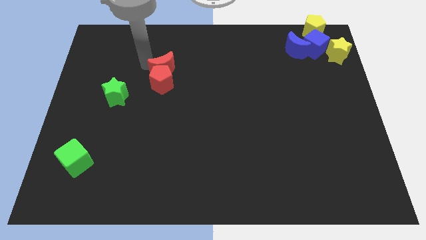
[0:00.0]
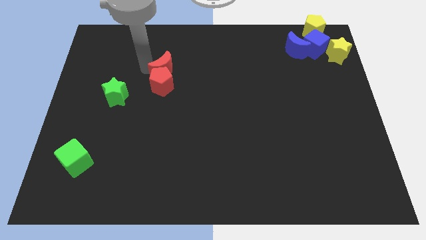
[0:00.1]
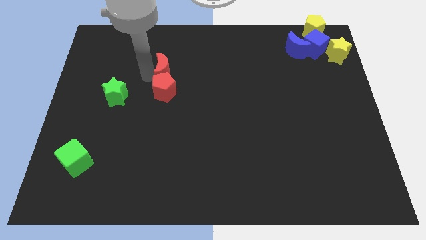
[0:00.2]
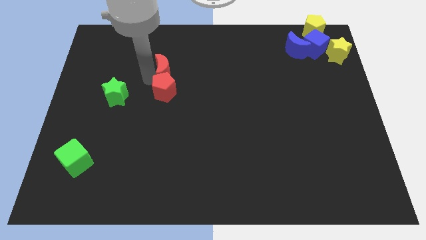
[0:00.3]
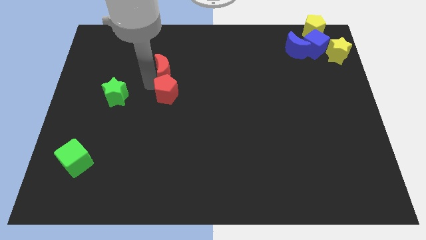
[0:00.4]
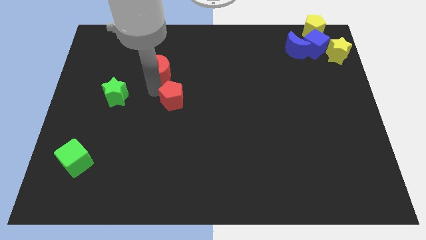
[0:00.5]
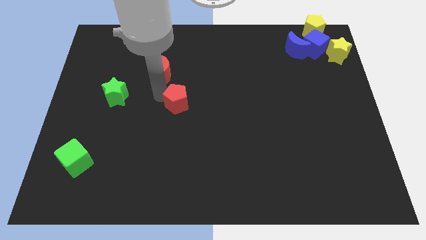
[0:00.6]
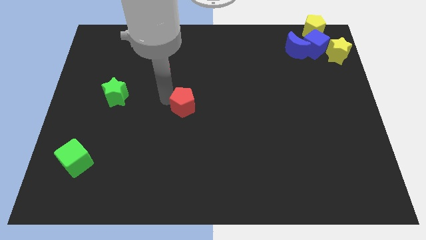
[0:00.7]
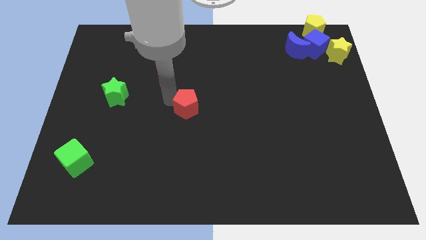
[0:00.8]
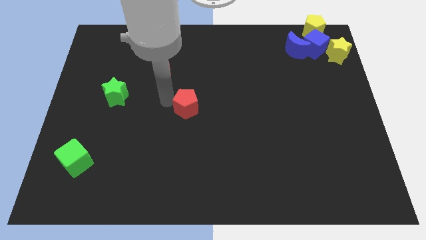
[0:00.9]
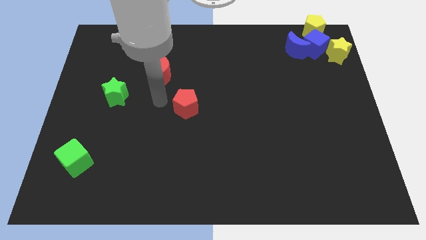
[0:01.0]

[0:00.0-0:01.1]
separate the red pentagon from the red crescent

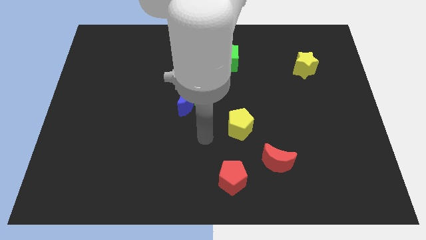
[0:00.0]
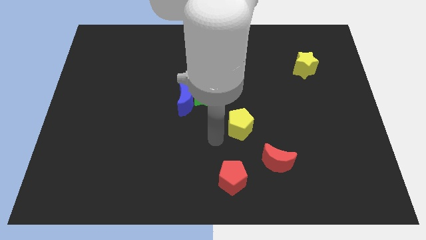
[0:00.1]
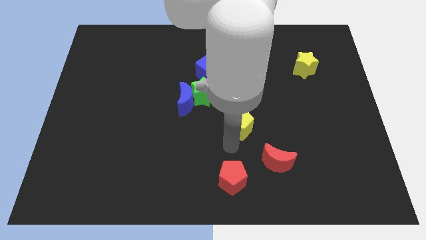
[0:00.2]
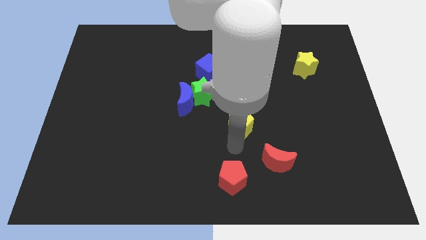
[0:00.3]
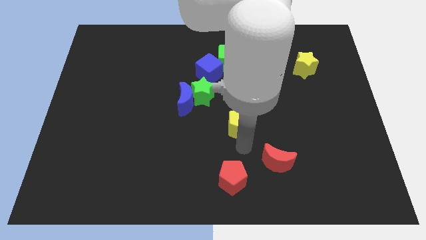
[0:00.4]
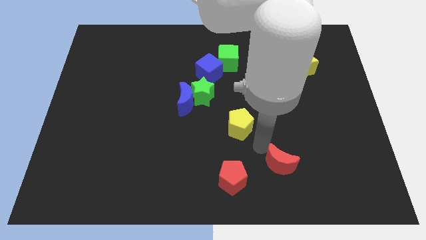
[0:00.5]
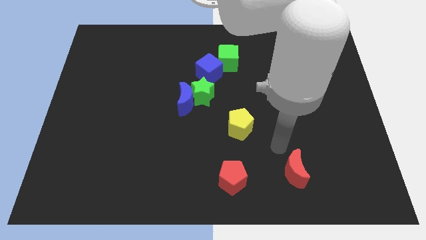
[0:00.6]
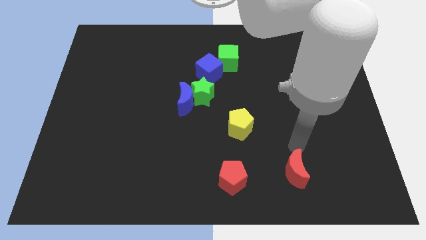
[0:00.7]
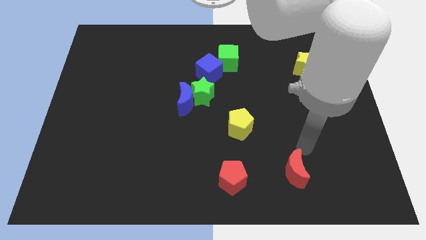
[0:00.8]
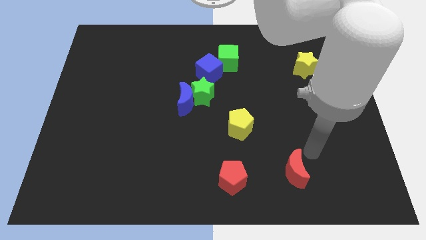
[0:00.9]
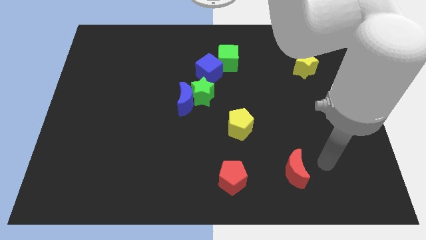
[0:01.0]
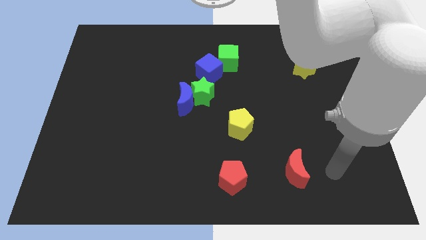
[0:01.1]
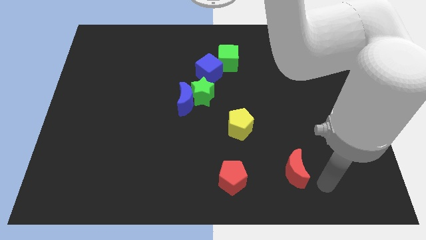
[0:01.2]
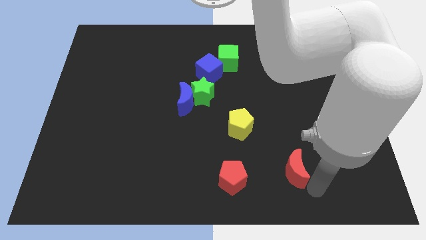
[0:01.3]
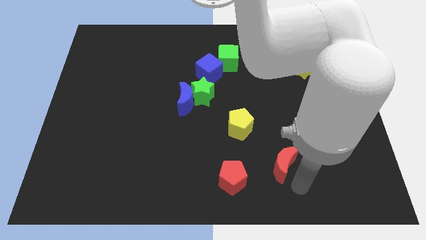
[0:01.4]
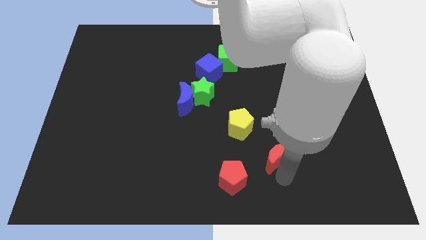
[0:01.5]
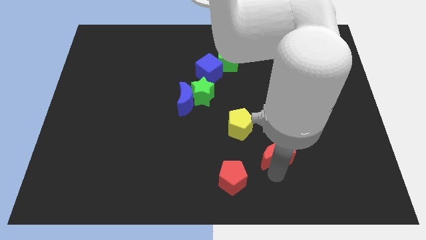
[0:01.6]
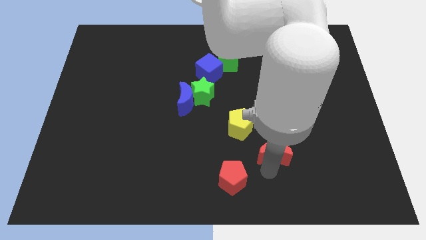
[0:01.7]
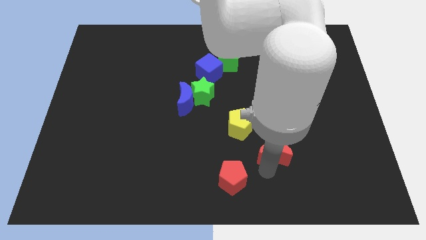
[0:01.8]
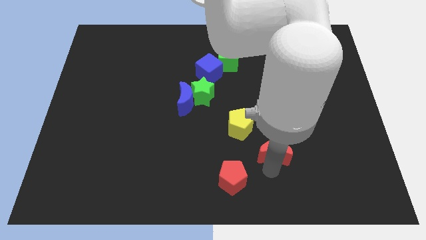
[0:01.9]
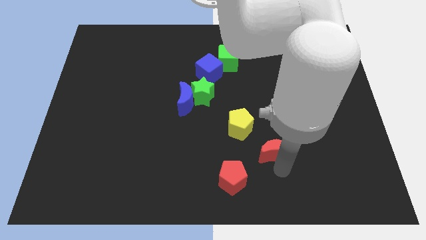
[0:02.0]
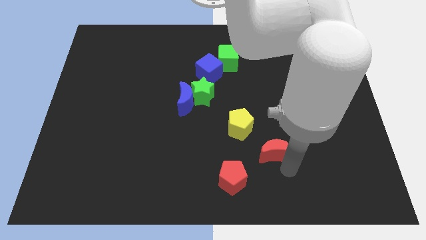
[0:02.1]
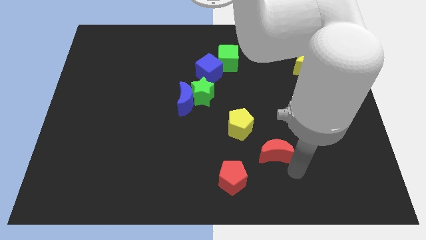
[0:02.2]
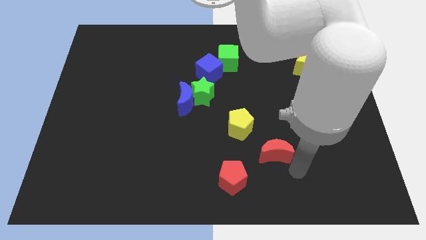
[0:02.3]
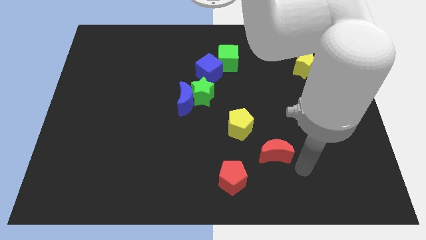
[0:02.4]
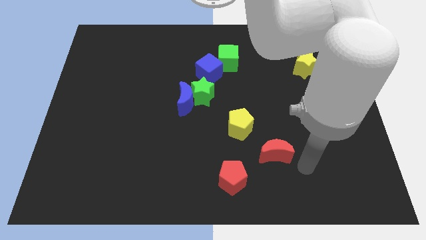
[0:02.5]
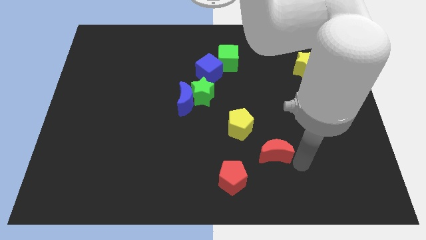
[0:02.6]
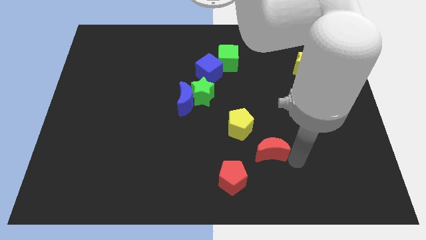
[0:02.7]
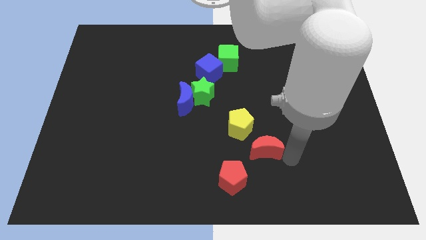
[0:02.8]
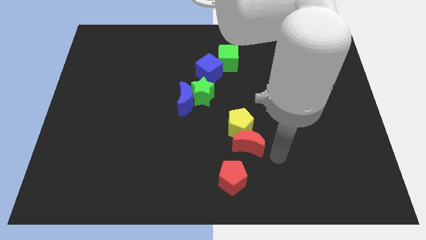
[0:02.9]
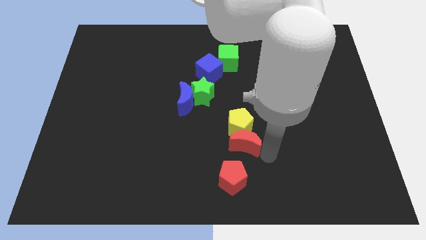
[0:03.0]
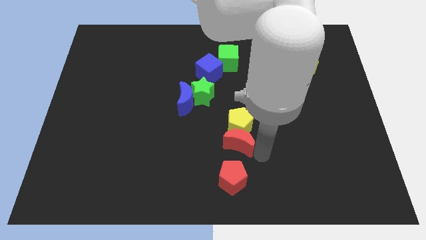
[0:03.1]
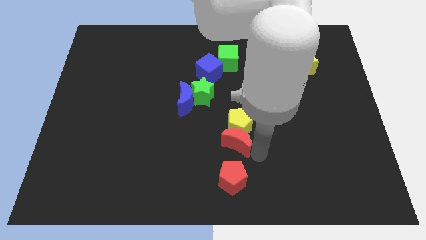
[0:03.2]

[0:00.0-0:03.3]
push the red crescent to the bottom of the yellow pentagon

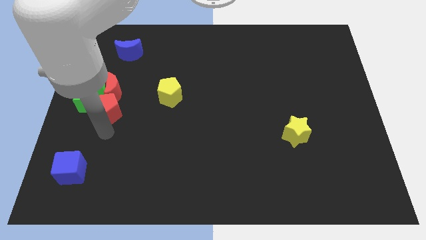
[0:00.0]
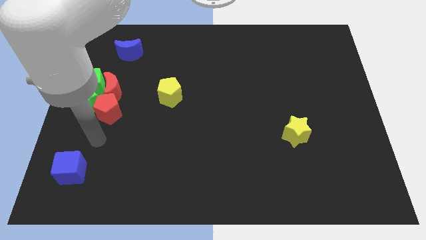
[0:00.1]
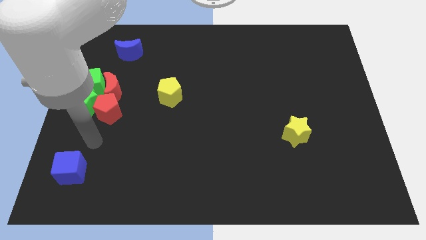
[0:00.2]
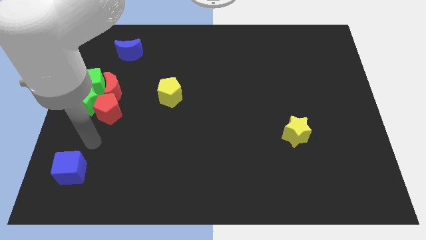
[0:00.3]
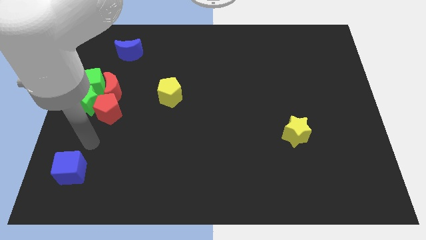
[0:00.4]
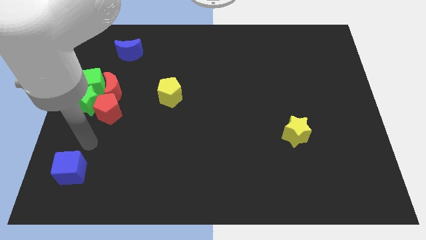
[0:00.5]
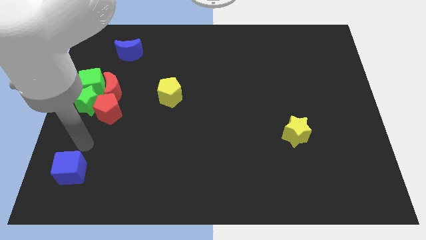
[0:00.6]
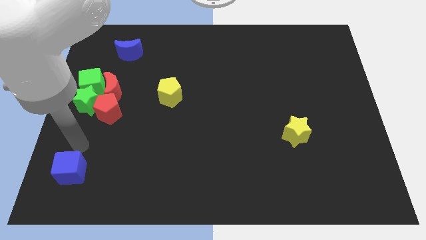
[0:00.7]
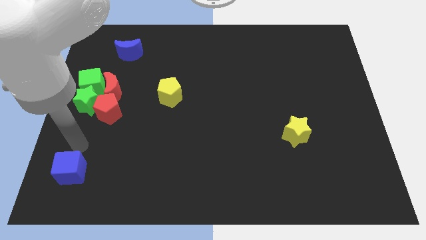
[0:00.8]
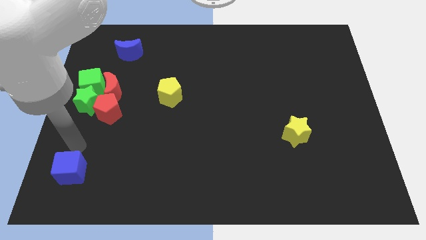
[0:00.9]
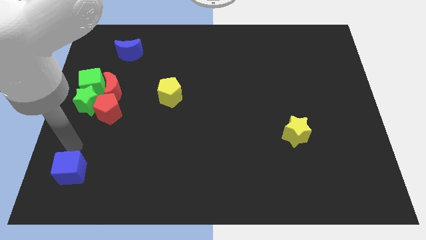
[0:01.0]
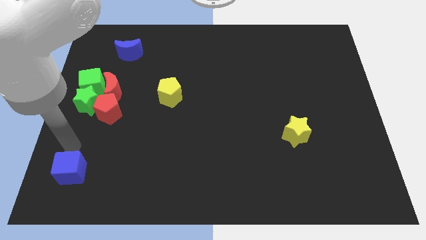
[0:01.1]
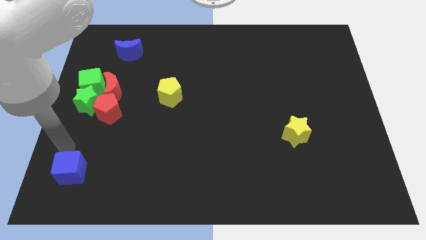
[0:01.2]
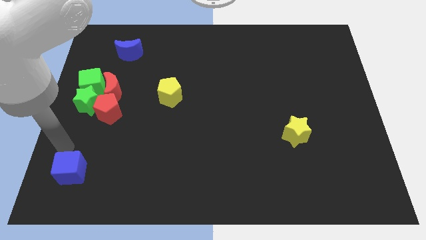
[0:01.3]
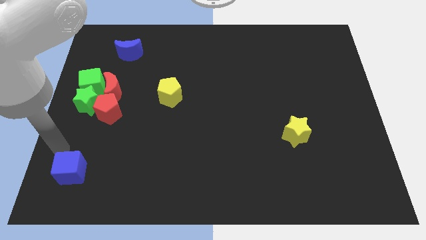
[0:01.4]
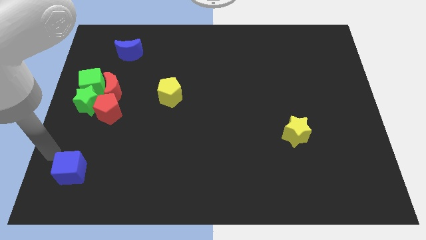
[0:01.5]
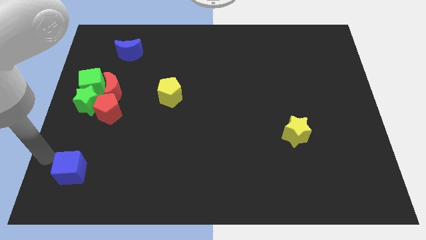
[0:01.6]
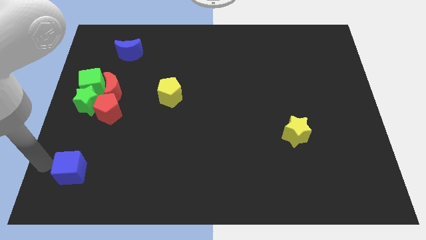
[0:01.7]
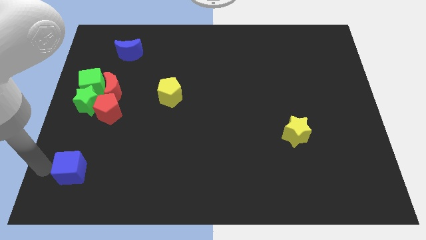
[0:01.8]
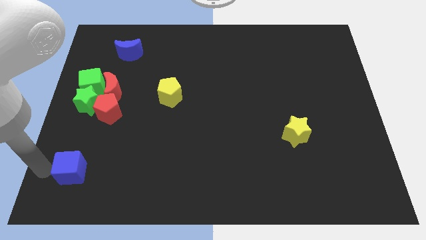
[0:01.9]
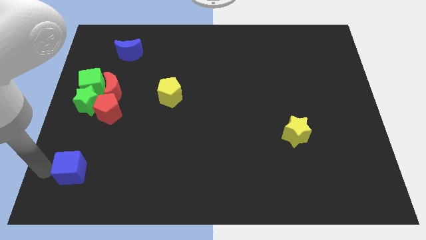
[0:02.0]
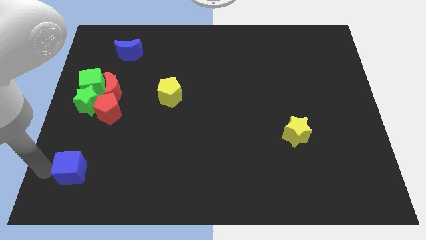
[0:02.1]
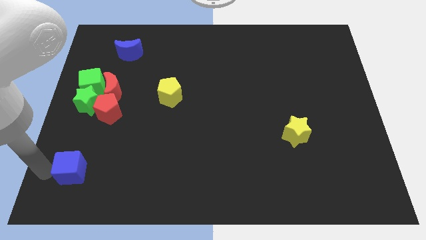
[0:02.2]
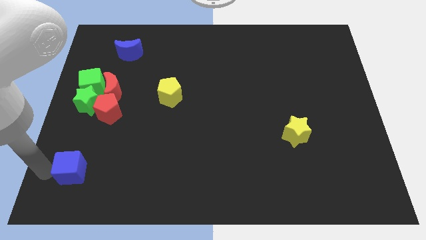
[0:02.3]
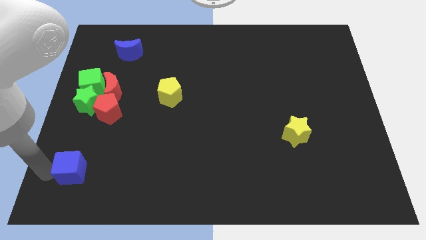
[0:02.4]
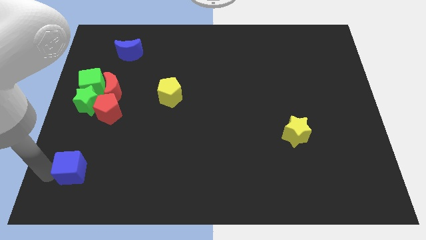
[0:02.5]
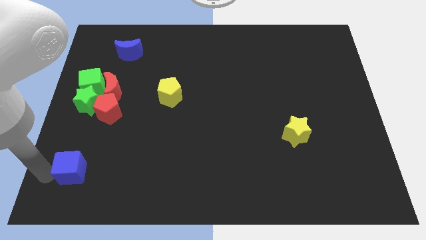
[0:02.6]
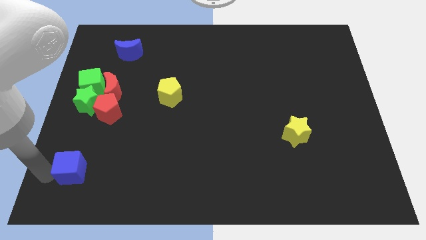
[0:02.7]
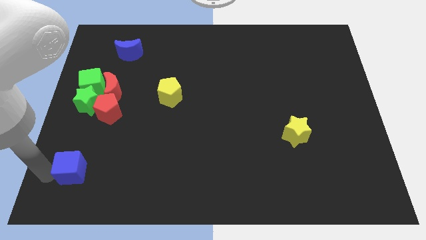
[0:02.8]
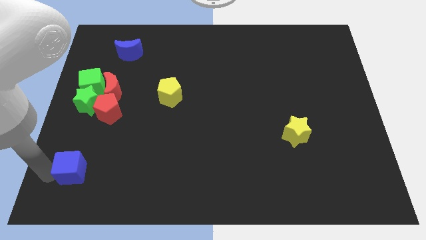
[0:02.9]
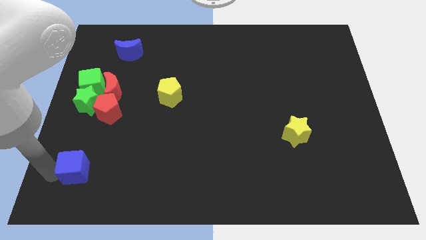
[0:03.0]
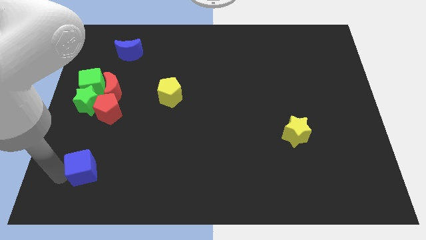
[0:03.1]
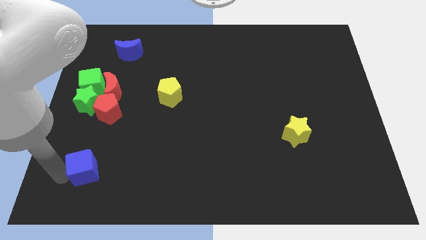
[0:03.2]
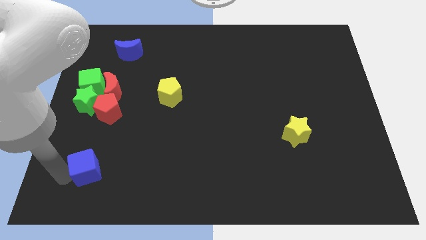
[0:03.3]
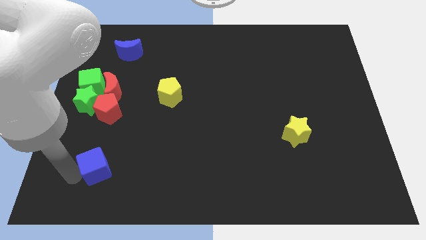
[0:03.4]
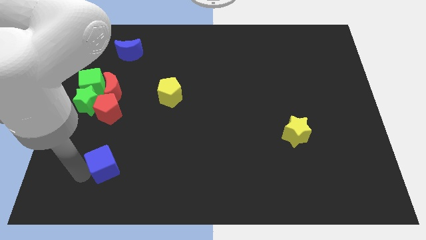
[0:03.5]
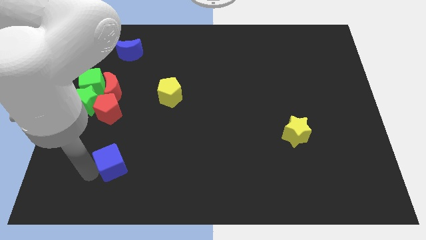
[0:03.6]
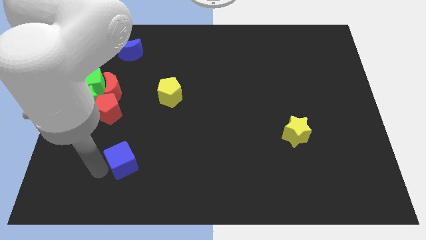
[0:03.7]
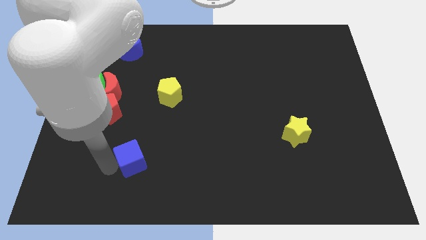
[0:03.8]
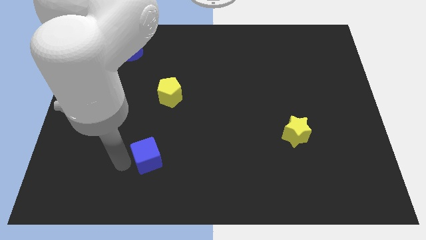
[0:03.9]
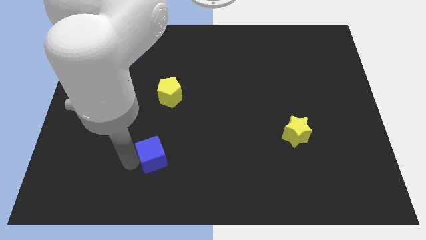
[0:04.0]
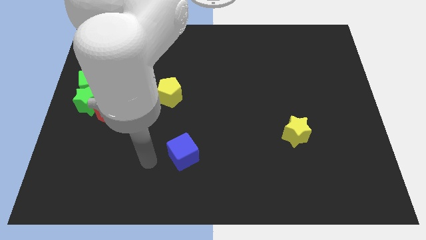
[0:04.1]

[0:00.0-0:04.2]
place the blue cube below the yellow pentagon

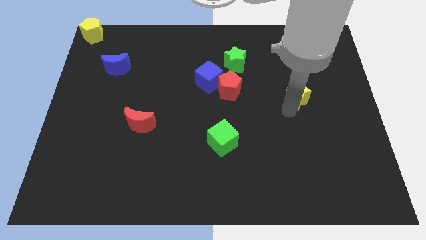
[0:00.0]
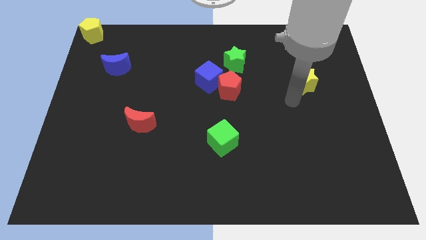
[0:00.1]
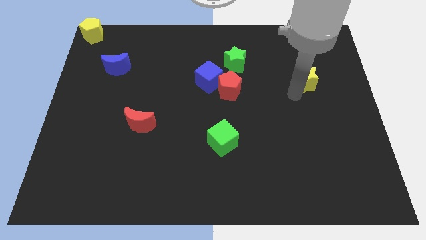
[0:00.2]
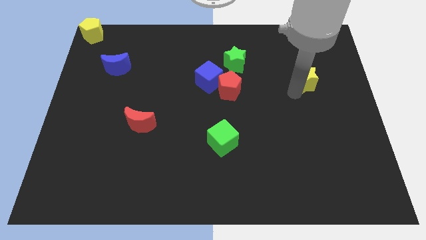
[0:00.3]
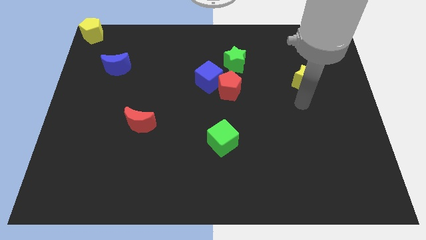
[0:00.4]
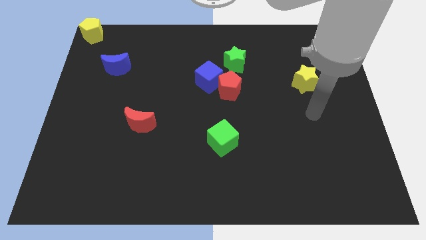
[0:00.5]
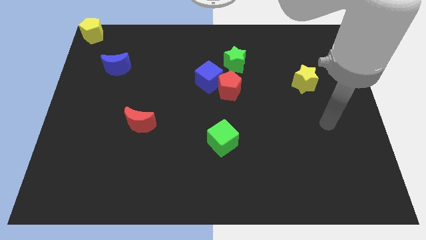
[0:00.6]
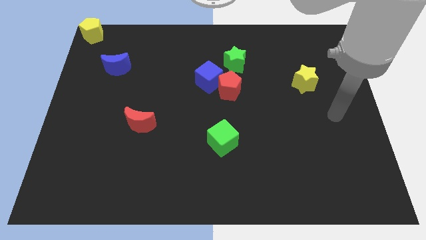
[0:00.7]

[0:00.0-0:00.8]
push yellow star diagonally up
